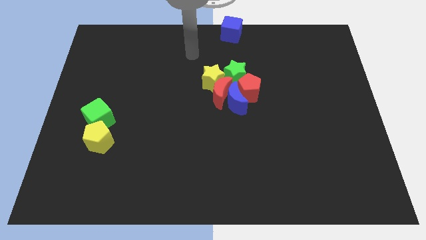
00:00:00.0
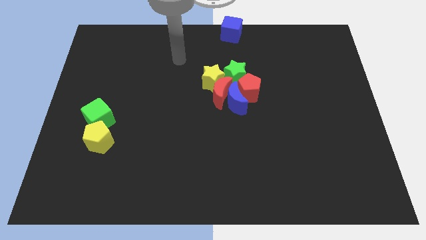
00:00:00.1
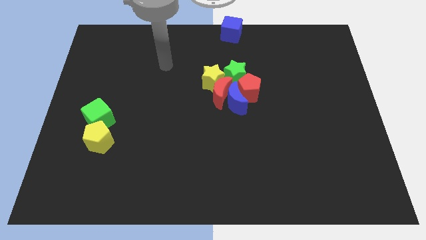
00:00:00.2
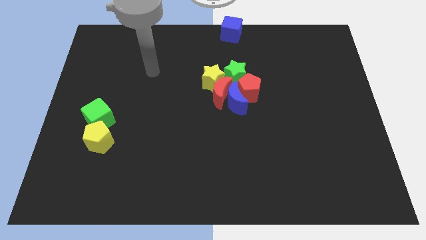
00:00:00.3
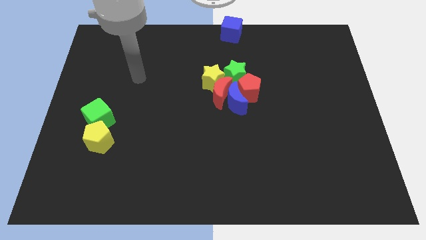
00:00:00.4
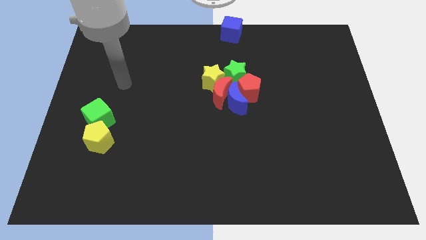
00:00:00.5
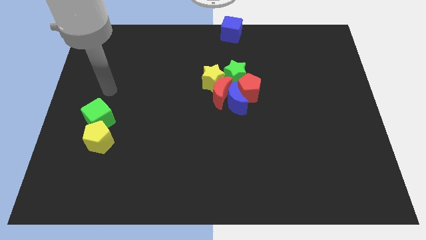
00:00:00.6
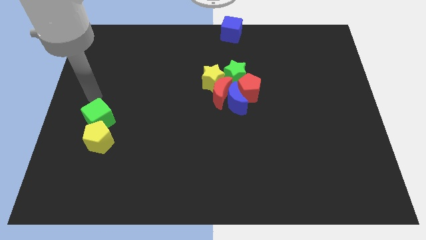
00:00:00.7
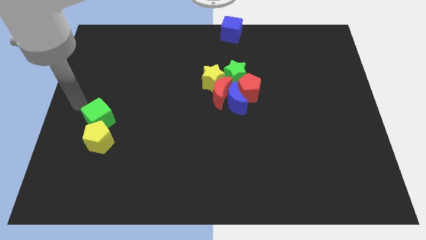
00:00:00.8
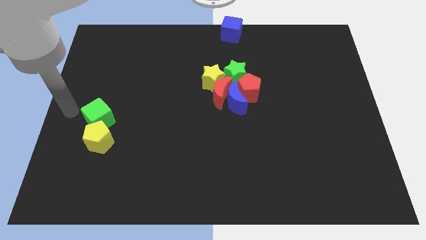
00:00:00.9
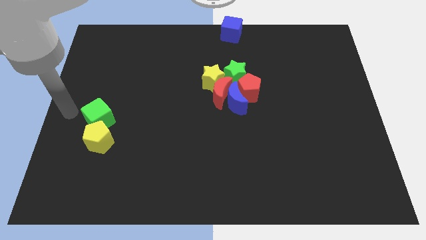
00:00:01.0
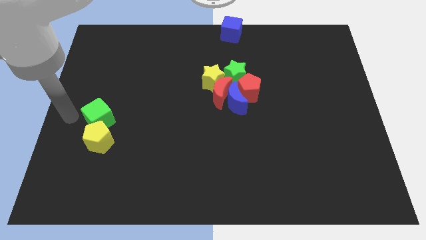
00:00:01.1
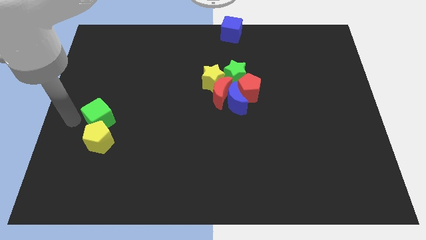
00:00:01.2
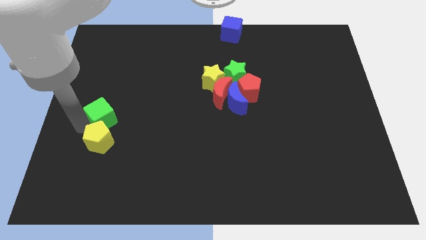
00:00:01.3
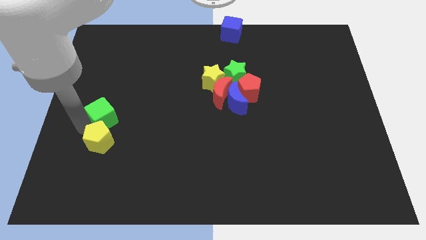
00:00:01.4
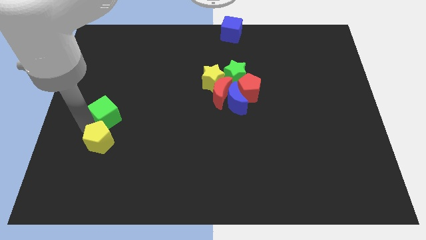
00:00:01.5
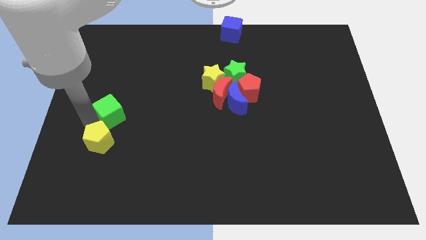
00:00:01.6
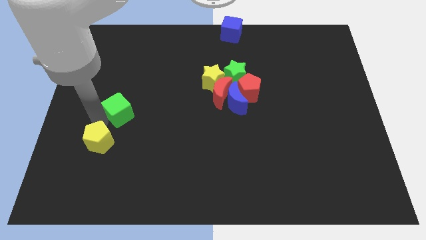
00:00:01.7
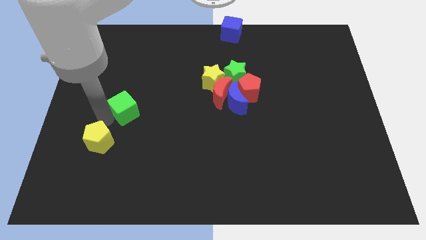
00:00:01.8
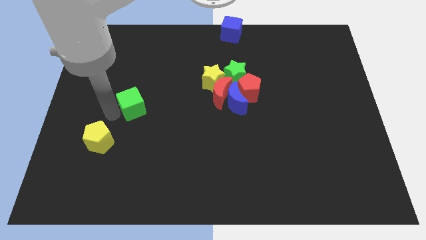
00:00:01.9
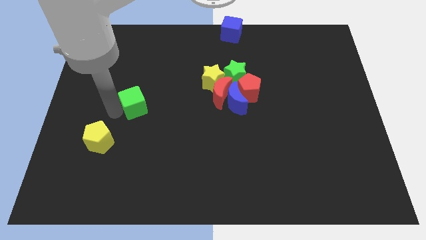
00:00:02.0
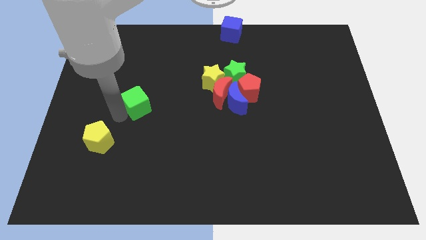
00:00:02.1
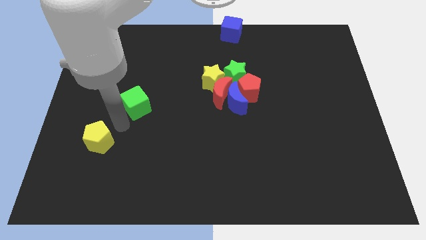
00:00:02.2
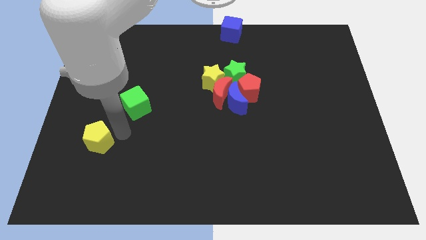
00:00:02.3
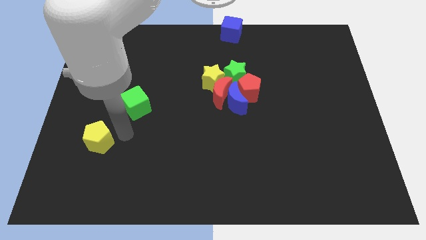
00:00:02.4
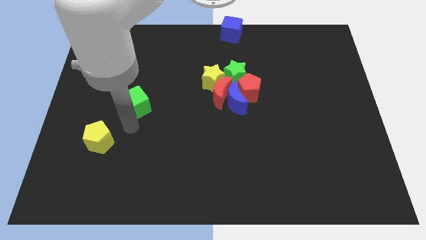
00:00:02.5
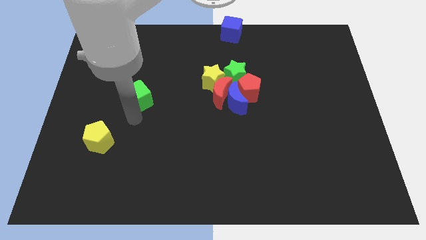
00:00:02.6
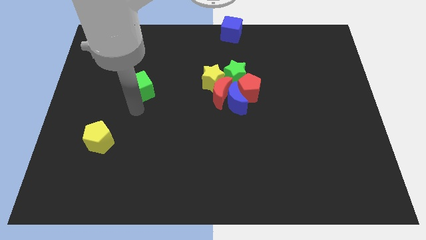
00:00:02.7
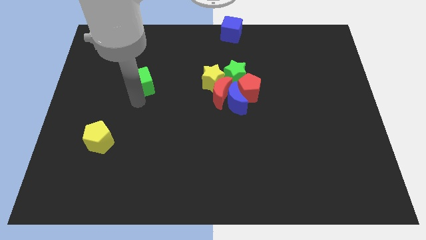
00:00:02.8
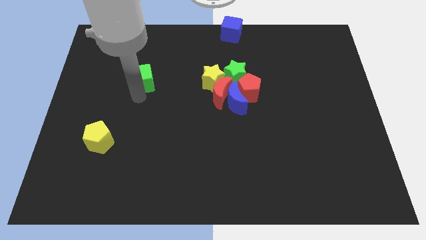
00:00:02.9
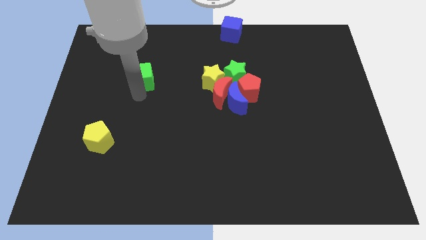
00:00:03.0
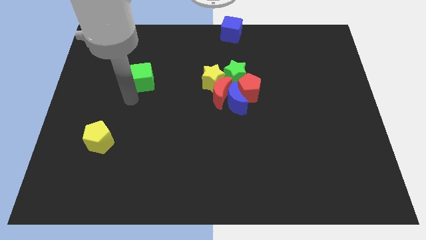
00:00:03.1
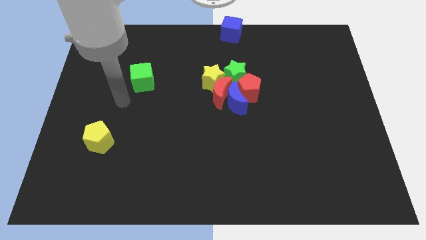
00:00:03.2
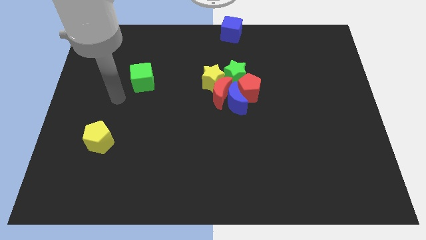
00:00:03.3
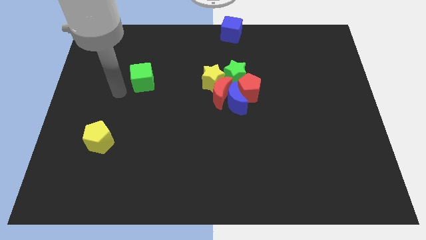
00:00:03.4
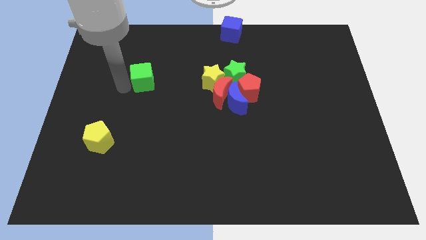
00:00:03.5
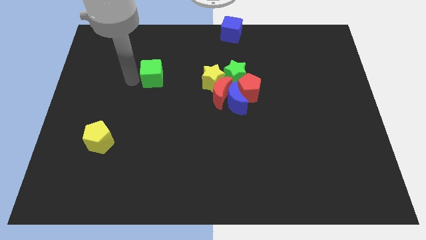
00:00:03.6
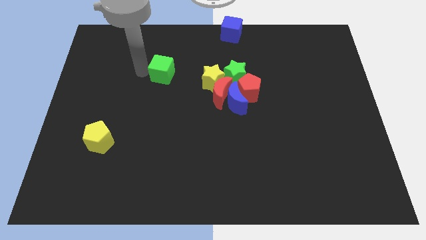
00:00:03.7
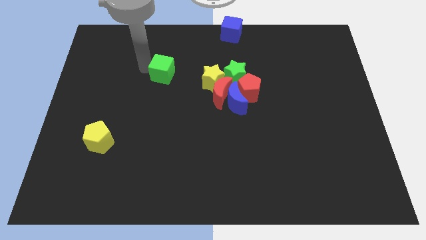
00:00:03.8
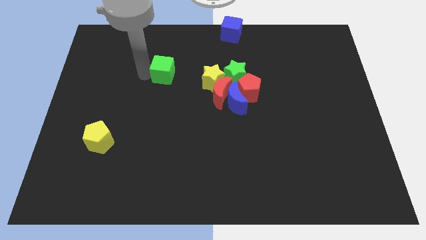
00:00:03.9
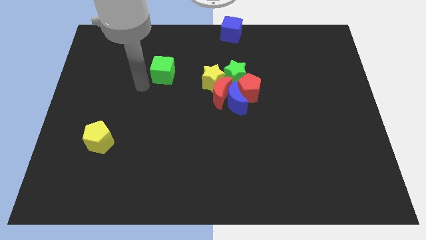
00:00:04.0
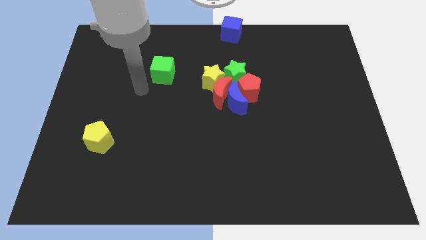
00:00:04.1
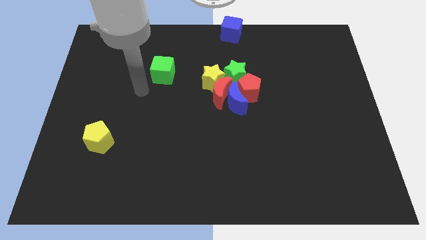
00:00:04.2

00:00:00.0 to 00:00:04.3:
place the green cube to the left of the yellow star

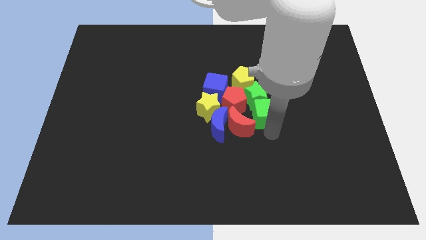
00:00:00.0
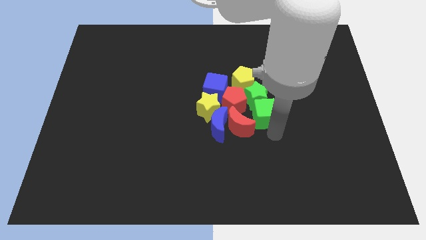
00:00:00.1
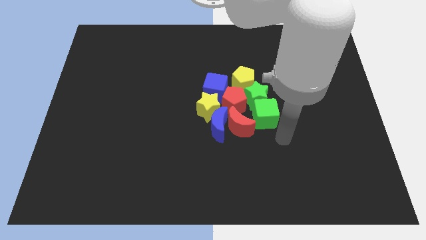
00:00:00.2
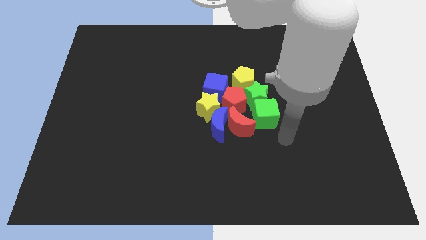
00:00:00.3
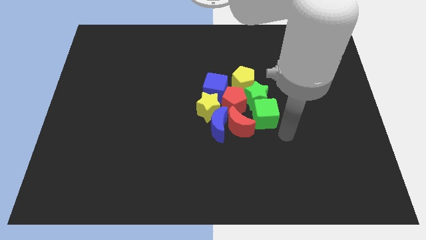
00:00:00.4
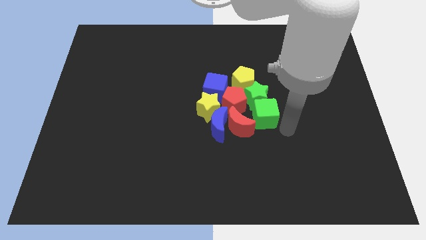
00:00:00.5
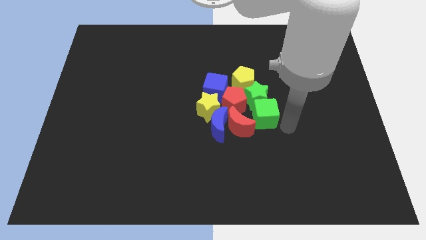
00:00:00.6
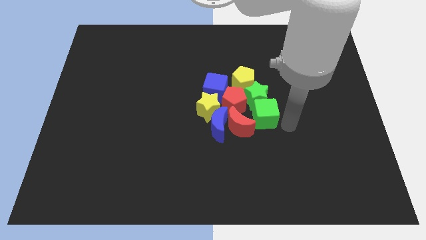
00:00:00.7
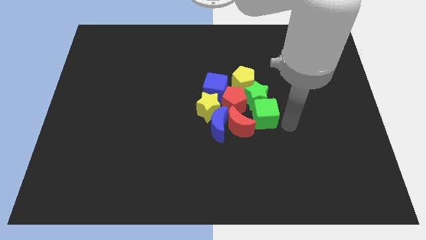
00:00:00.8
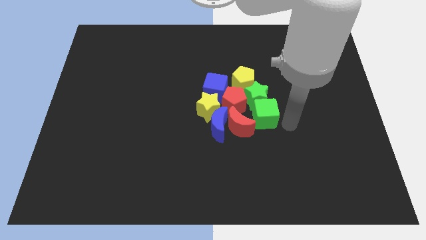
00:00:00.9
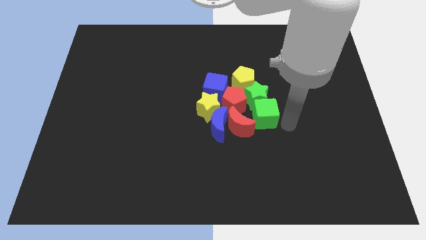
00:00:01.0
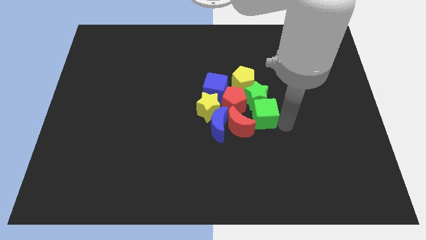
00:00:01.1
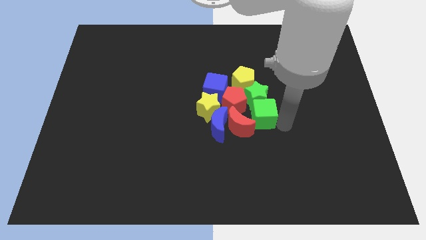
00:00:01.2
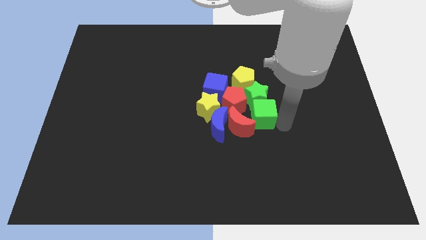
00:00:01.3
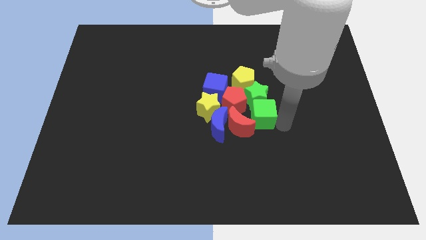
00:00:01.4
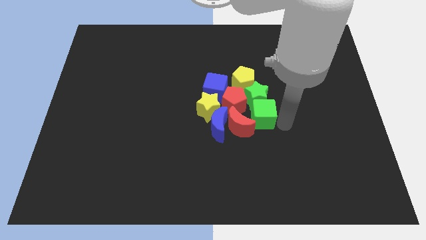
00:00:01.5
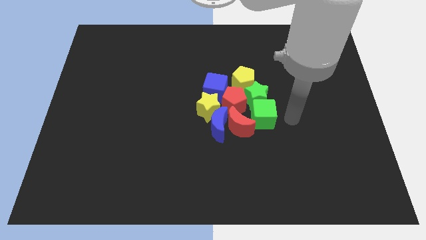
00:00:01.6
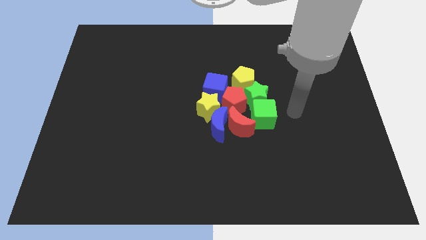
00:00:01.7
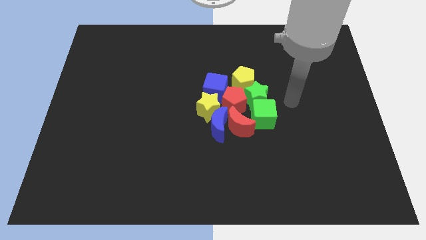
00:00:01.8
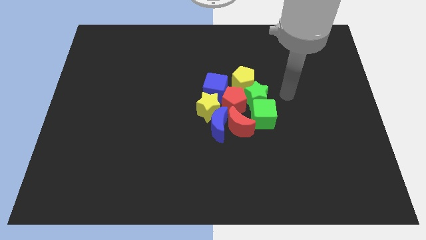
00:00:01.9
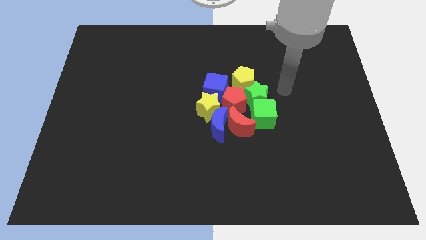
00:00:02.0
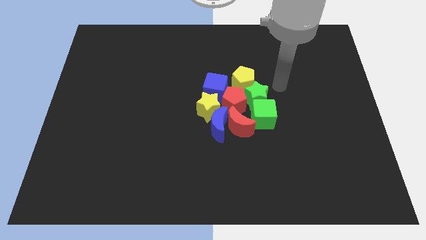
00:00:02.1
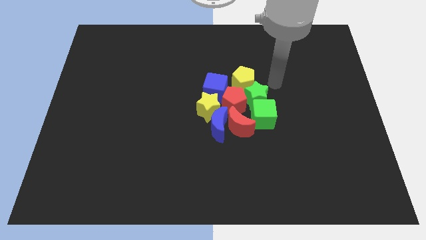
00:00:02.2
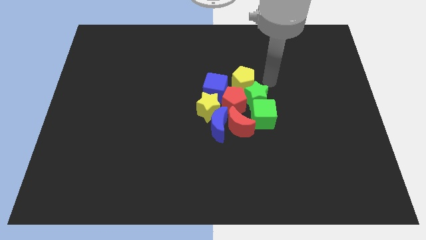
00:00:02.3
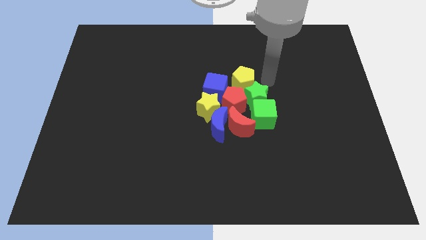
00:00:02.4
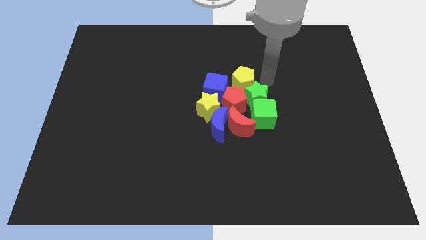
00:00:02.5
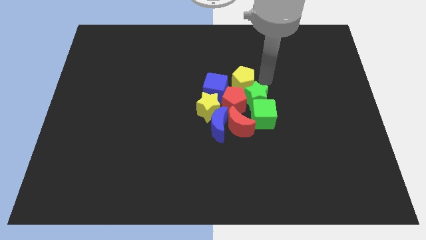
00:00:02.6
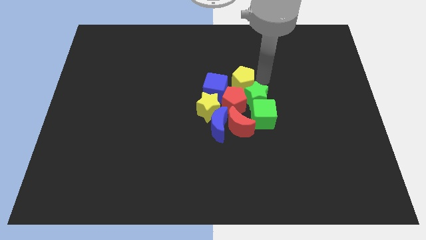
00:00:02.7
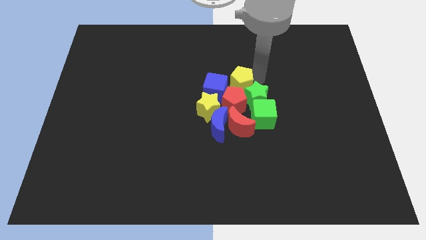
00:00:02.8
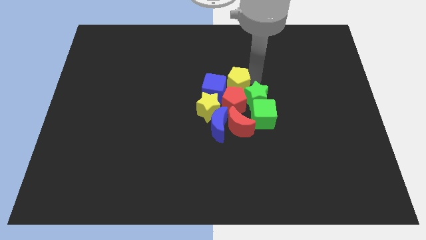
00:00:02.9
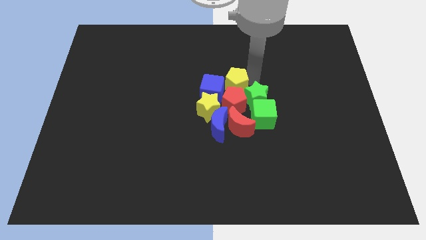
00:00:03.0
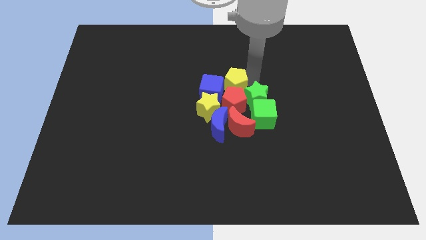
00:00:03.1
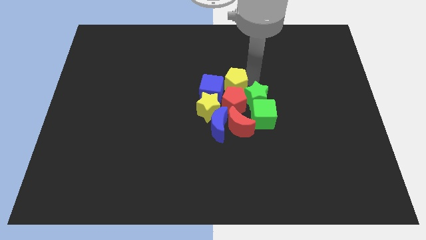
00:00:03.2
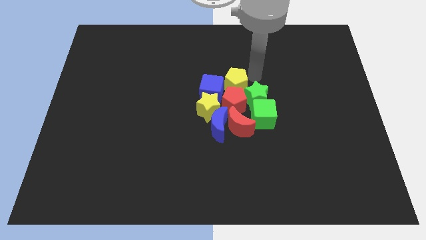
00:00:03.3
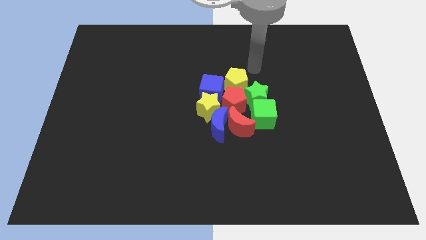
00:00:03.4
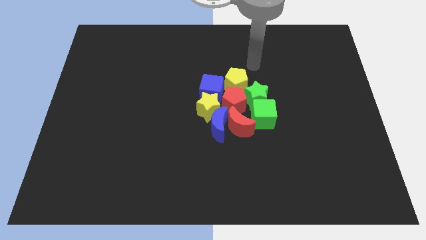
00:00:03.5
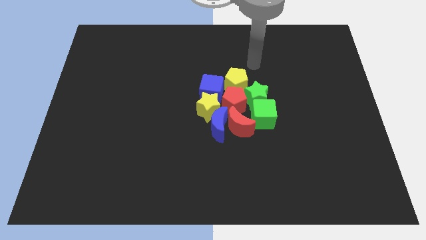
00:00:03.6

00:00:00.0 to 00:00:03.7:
adjust the yellow pentagon into the group of blocks

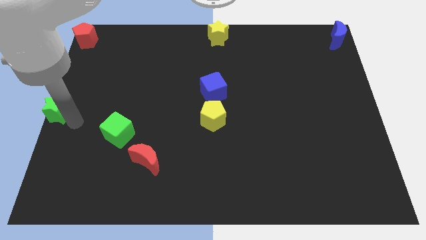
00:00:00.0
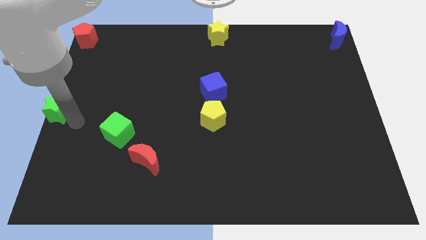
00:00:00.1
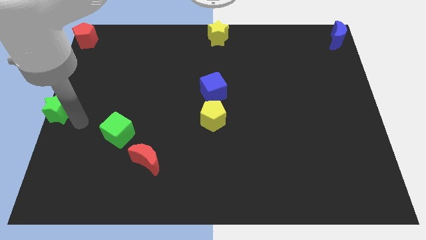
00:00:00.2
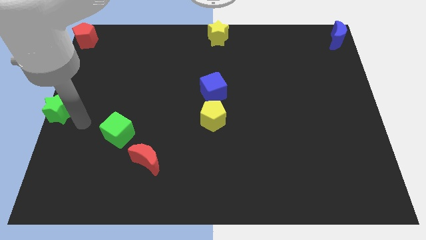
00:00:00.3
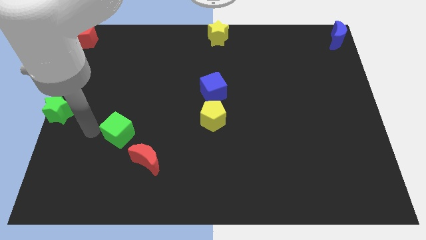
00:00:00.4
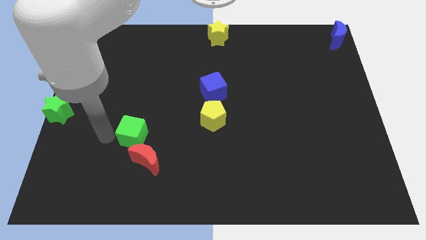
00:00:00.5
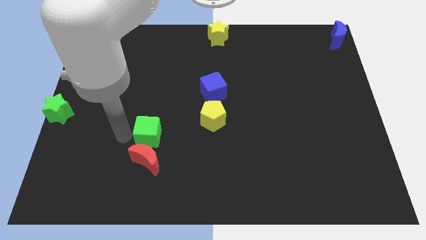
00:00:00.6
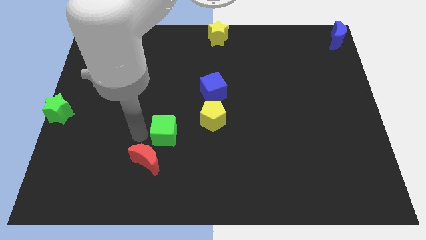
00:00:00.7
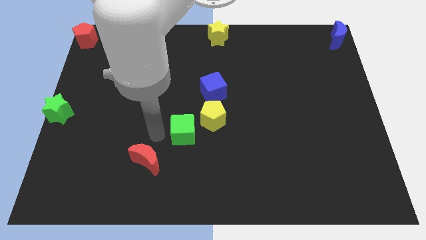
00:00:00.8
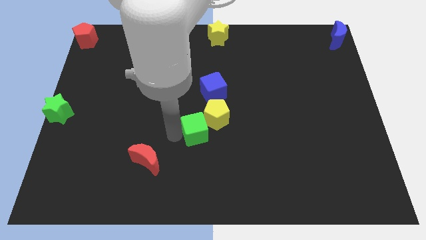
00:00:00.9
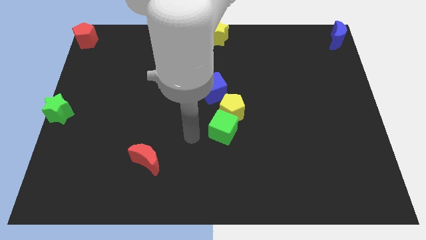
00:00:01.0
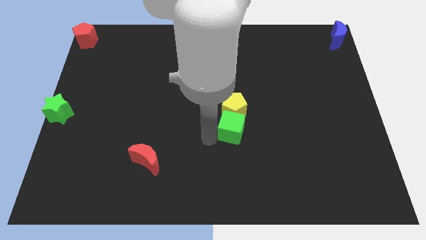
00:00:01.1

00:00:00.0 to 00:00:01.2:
move the green cube into the yellow pentagon
